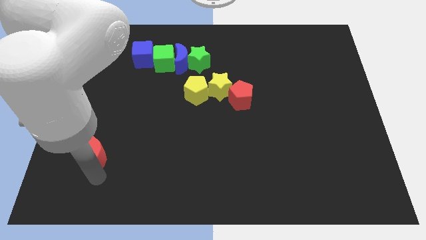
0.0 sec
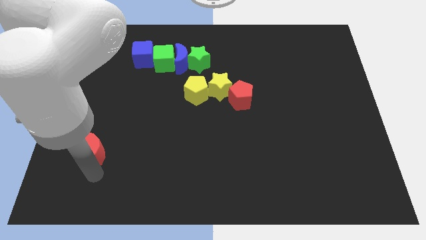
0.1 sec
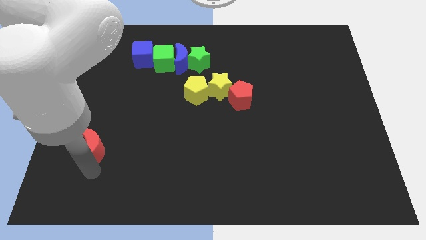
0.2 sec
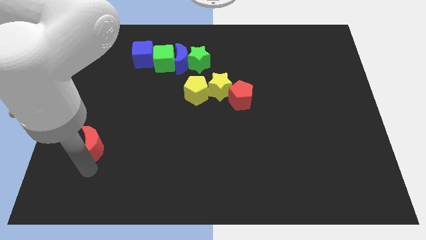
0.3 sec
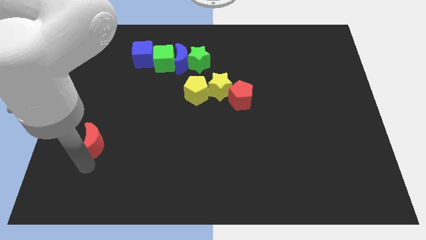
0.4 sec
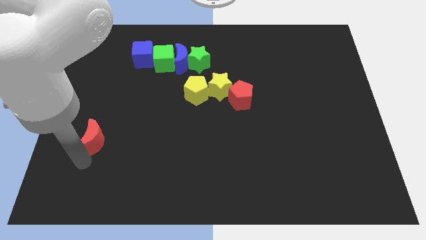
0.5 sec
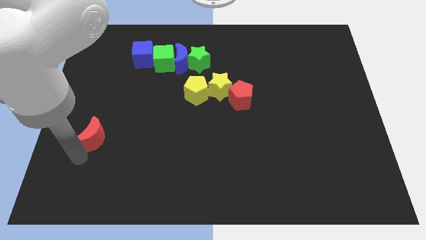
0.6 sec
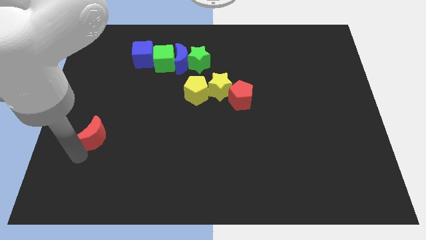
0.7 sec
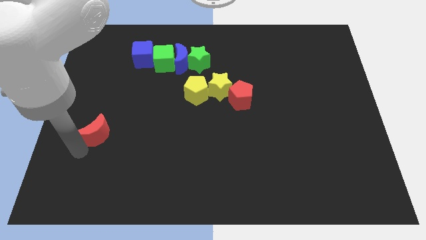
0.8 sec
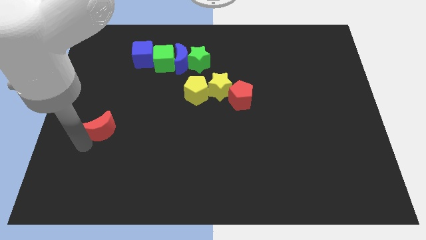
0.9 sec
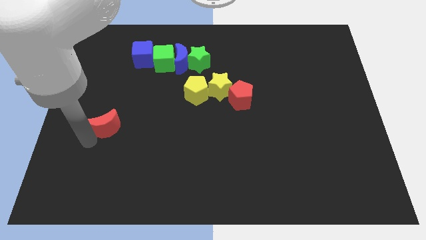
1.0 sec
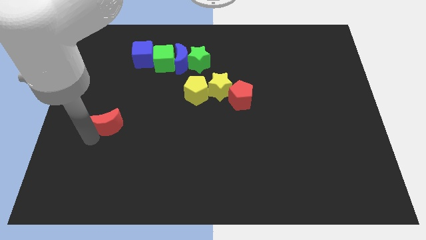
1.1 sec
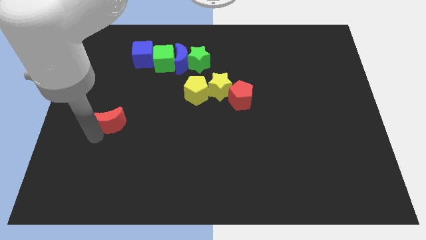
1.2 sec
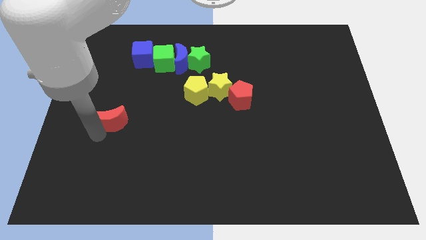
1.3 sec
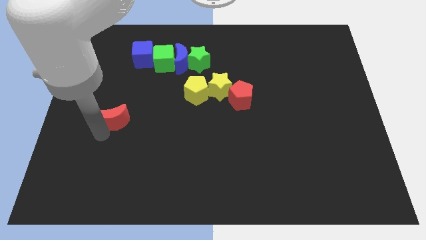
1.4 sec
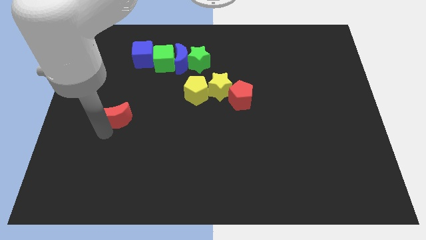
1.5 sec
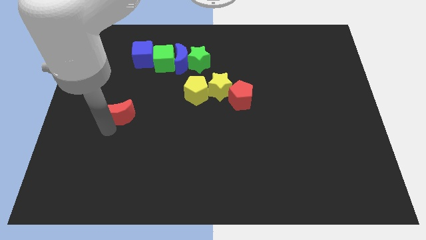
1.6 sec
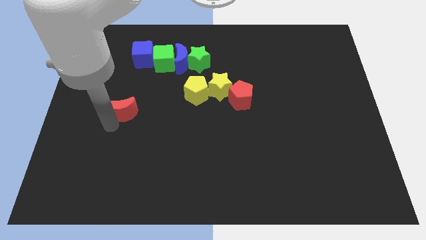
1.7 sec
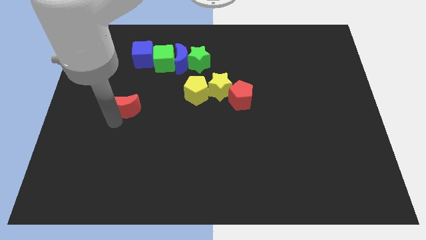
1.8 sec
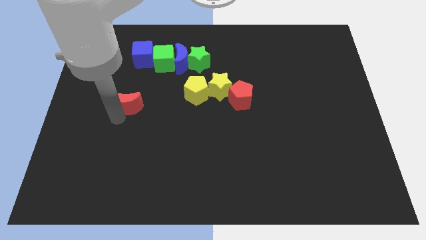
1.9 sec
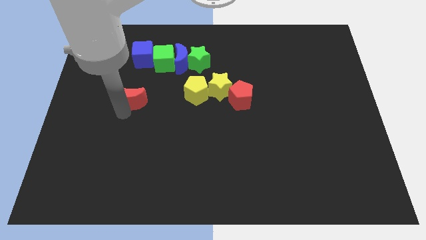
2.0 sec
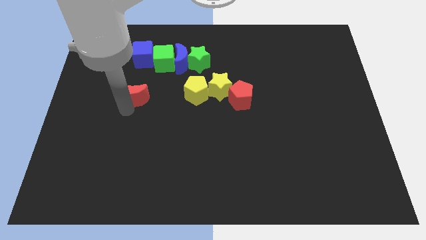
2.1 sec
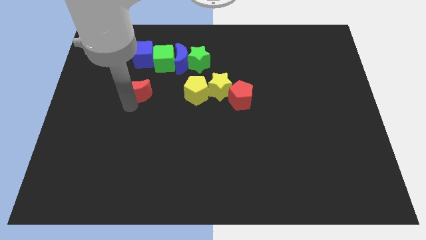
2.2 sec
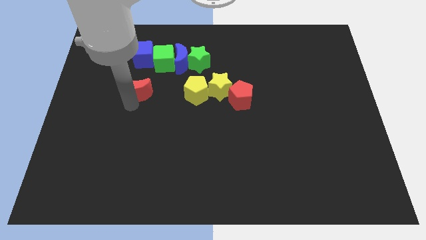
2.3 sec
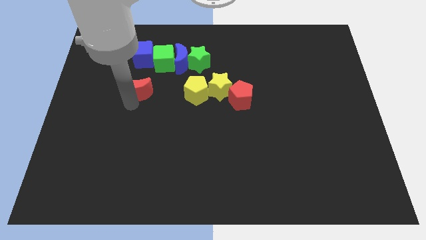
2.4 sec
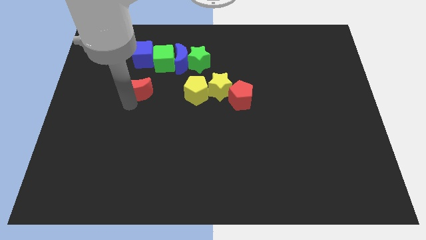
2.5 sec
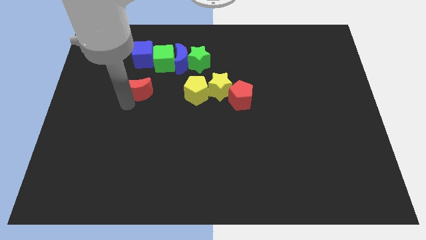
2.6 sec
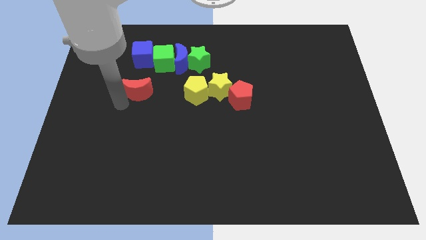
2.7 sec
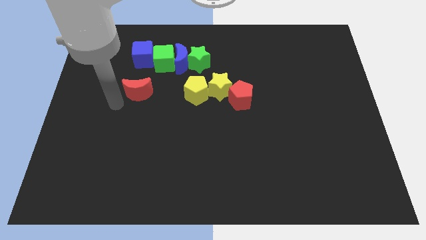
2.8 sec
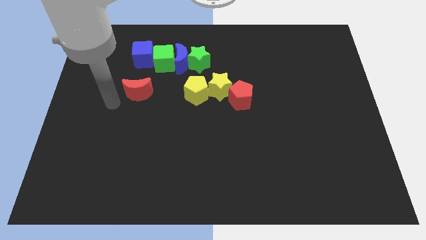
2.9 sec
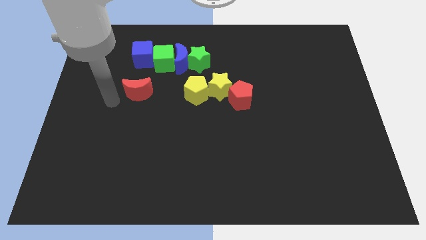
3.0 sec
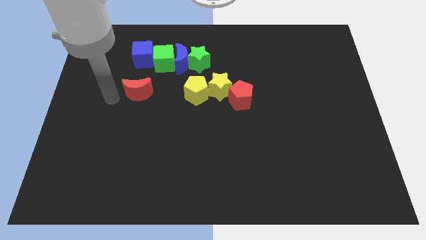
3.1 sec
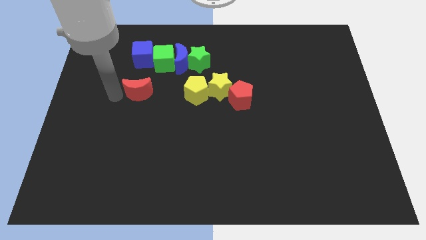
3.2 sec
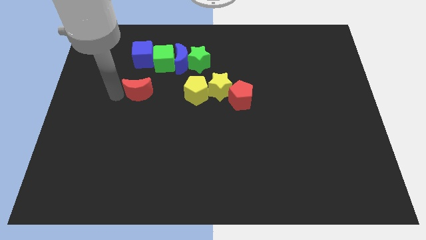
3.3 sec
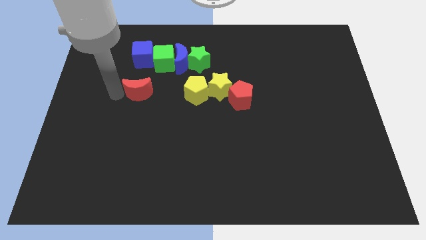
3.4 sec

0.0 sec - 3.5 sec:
move the red moon below the blue cube

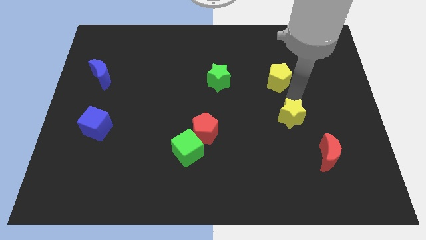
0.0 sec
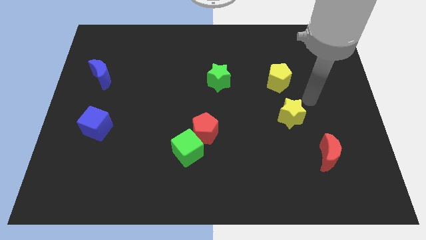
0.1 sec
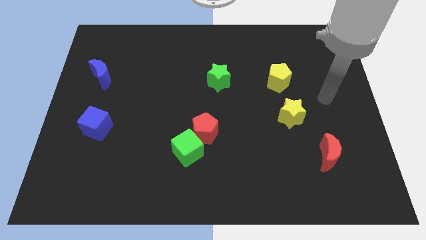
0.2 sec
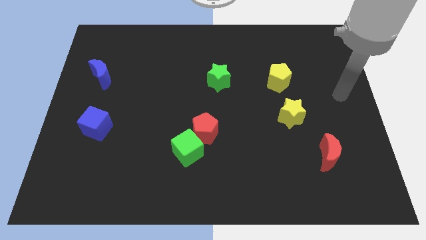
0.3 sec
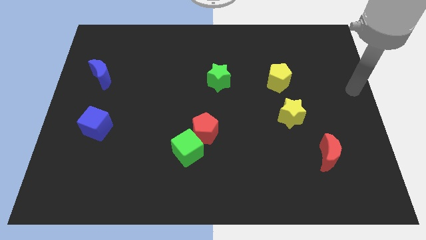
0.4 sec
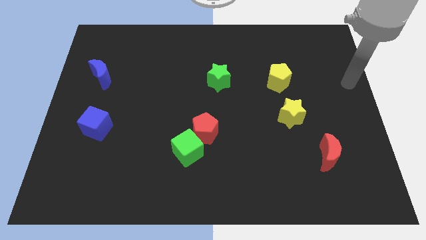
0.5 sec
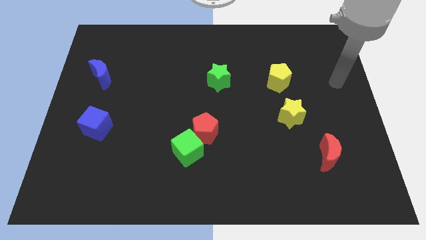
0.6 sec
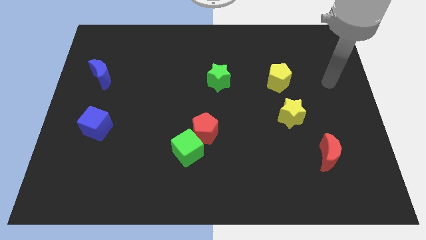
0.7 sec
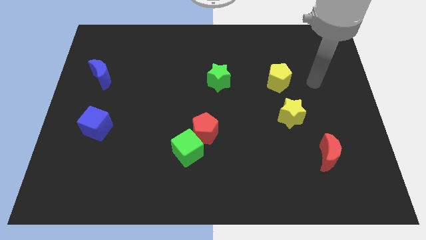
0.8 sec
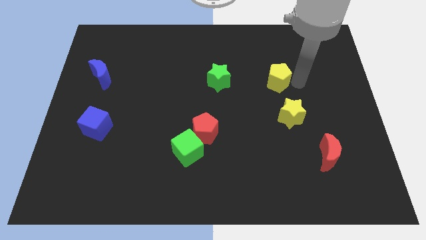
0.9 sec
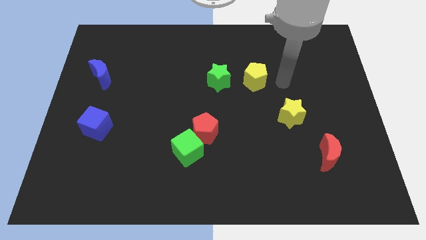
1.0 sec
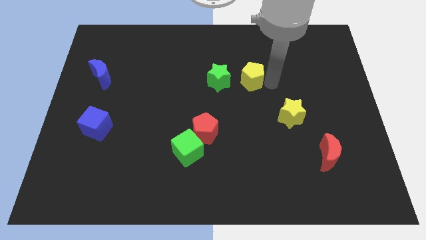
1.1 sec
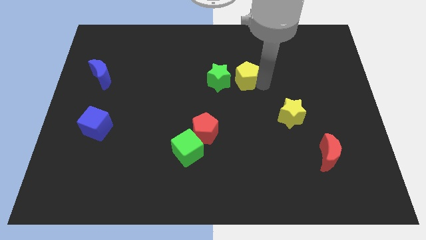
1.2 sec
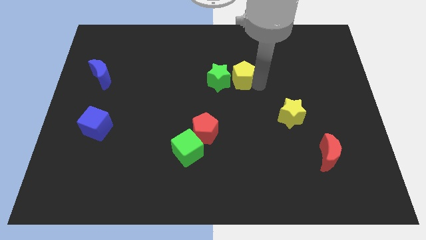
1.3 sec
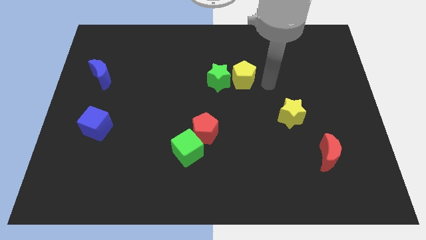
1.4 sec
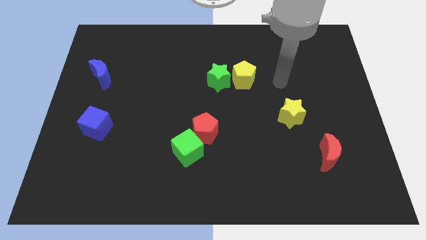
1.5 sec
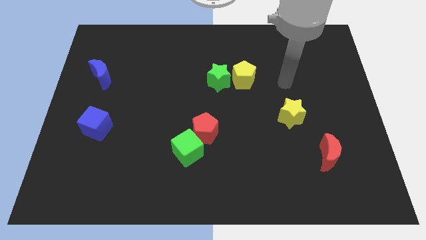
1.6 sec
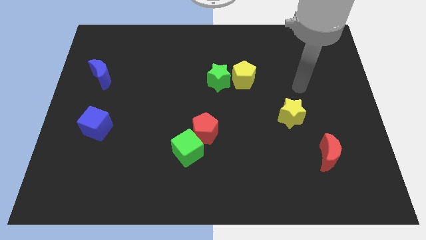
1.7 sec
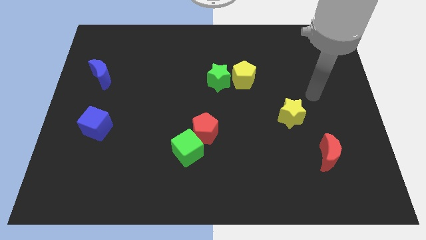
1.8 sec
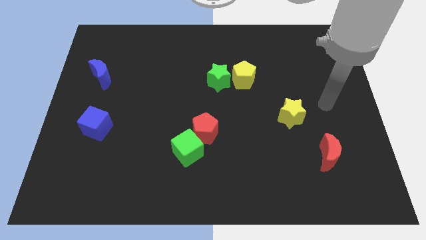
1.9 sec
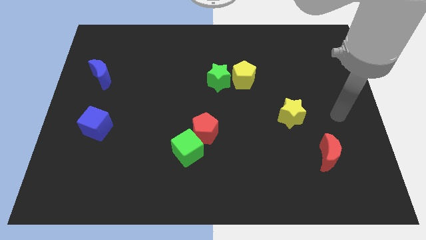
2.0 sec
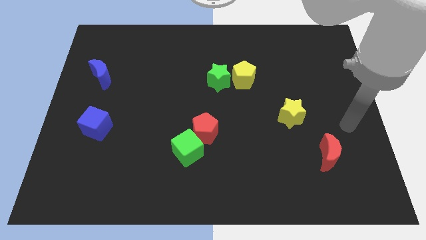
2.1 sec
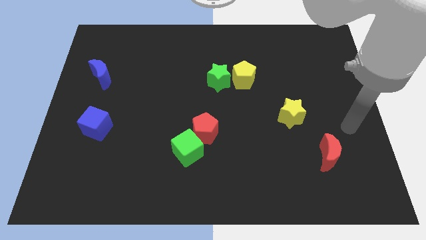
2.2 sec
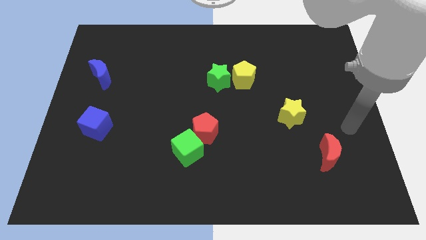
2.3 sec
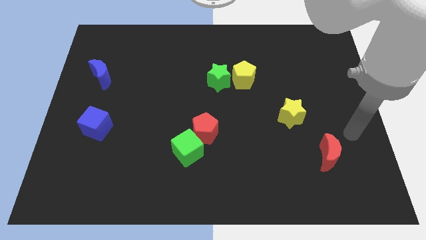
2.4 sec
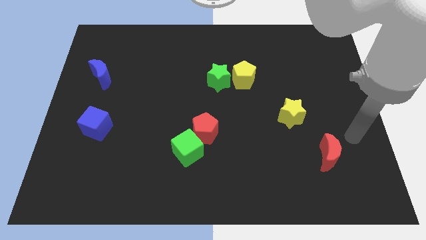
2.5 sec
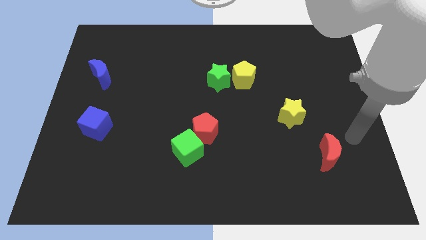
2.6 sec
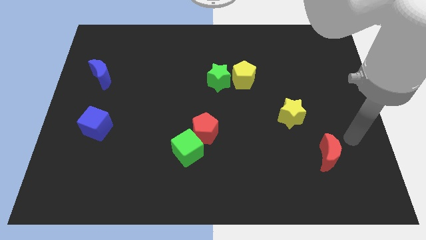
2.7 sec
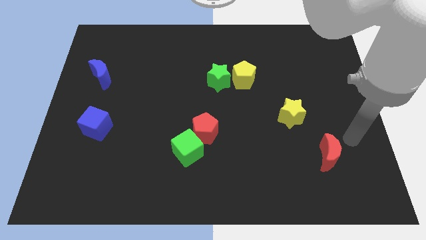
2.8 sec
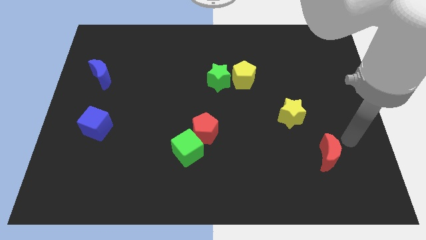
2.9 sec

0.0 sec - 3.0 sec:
place the yellow pentagon to the right of green star

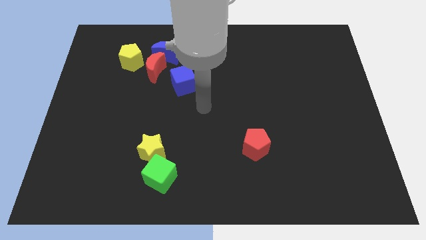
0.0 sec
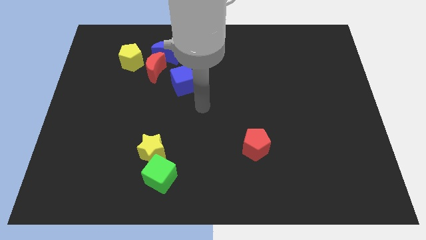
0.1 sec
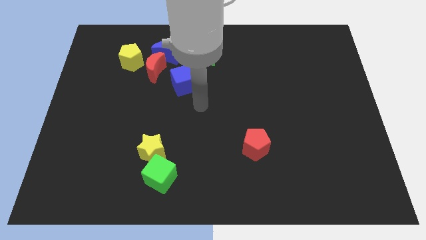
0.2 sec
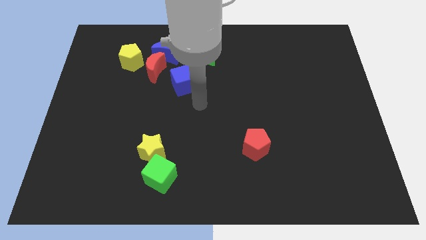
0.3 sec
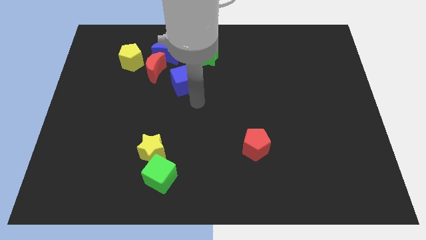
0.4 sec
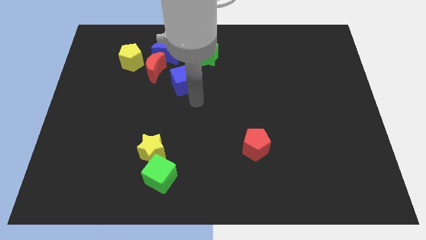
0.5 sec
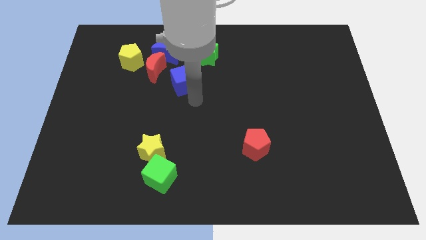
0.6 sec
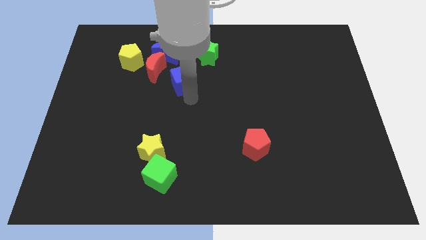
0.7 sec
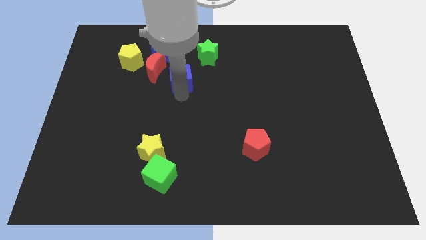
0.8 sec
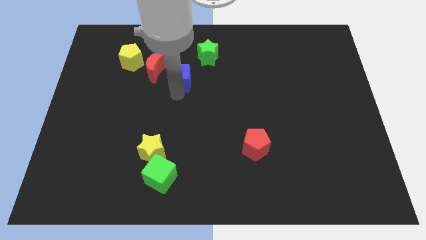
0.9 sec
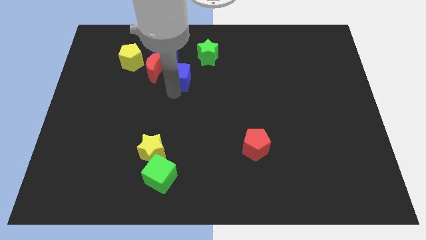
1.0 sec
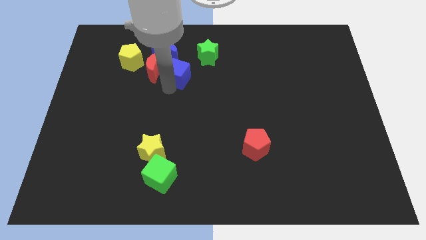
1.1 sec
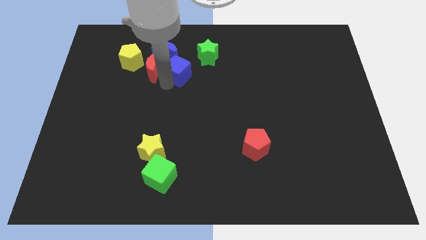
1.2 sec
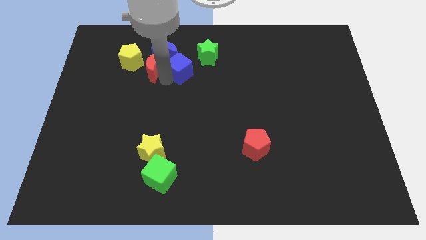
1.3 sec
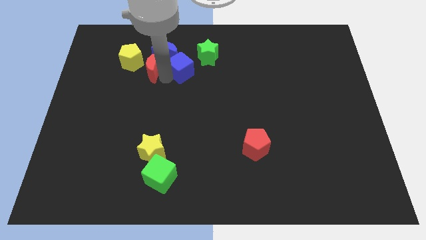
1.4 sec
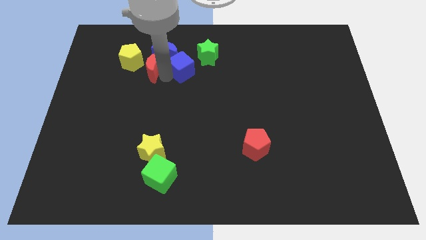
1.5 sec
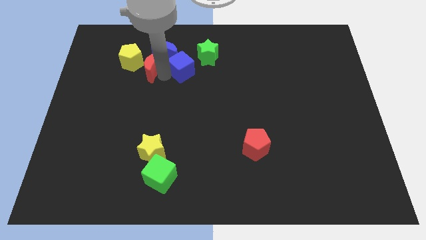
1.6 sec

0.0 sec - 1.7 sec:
push the blue cube up slightly

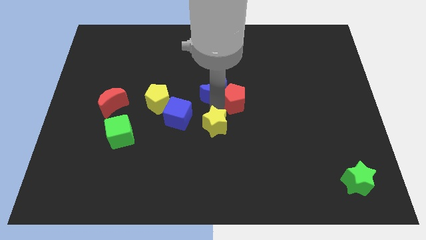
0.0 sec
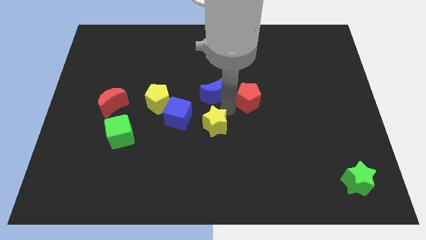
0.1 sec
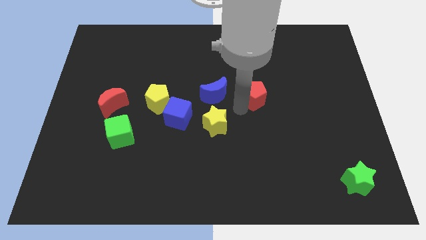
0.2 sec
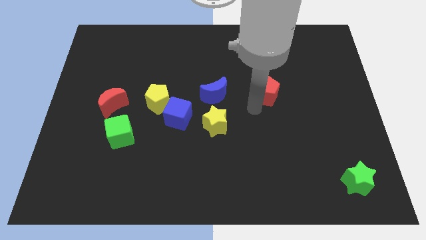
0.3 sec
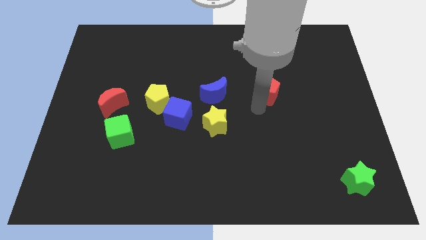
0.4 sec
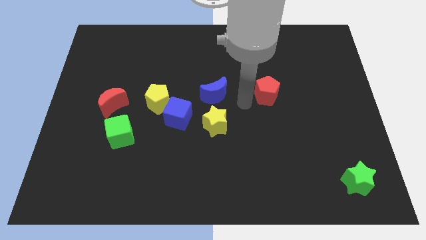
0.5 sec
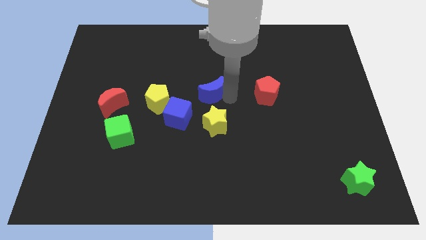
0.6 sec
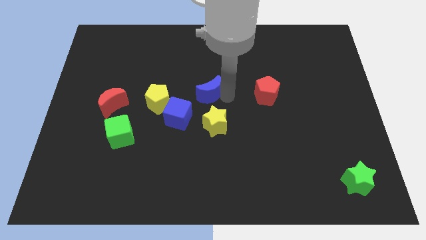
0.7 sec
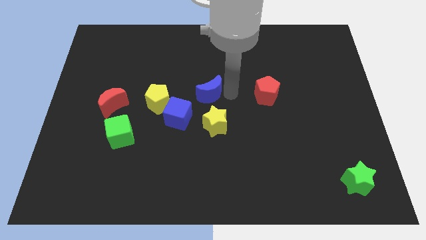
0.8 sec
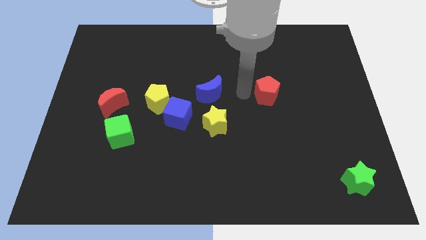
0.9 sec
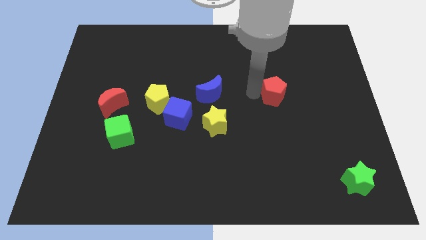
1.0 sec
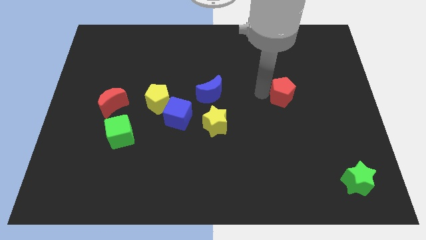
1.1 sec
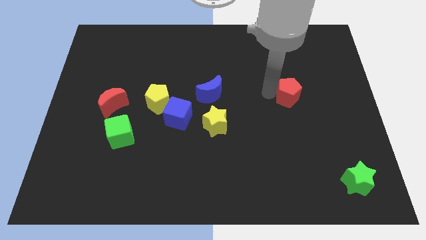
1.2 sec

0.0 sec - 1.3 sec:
separate the red pentagon from the blue crescent
